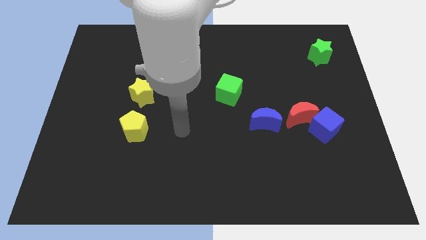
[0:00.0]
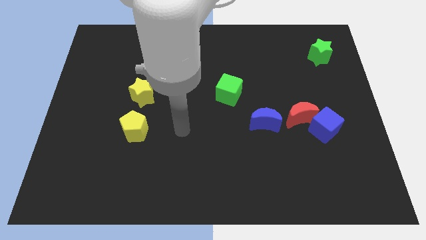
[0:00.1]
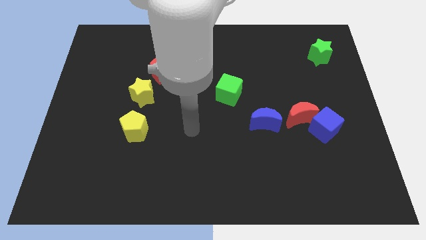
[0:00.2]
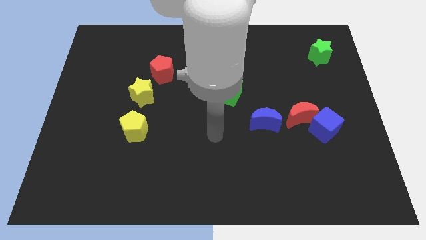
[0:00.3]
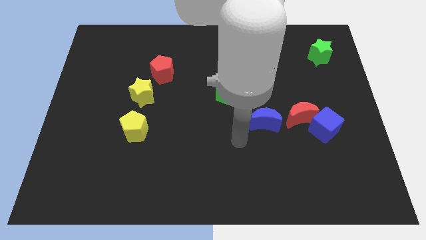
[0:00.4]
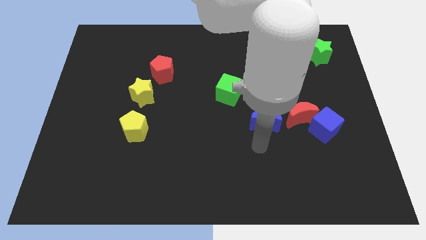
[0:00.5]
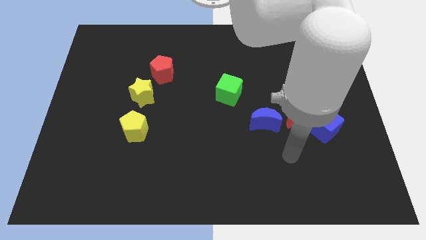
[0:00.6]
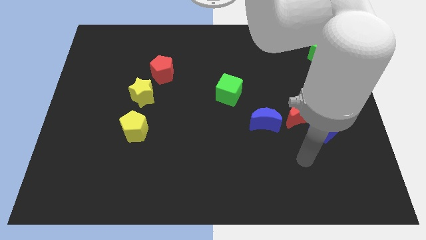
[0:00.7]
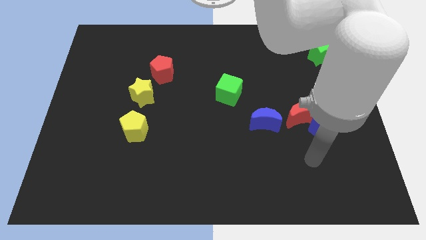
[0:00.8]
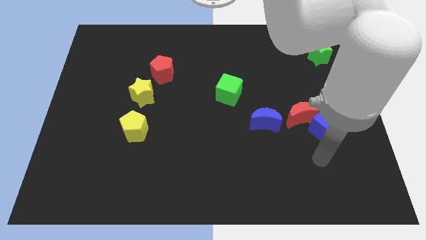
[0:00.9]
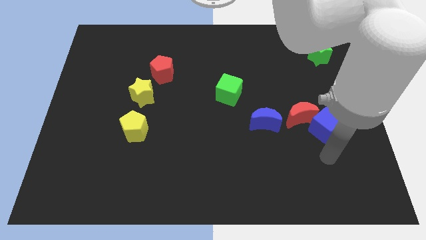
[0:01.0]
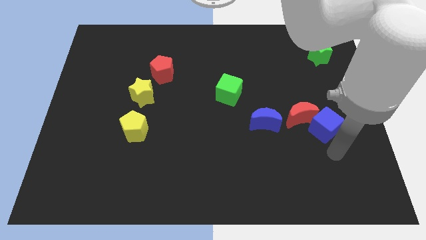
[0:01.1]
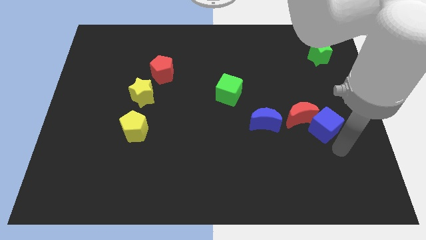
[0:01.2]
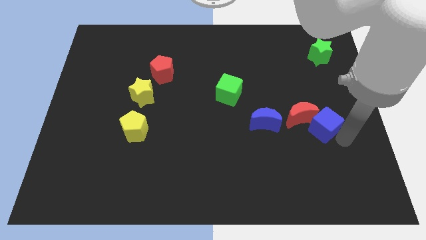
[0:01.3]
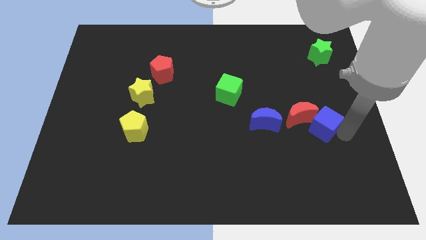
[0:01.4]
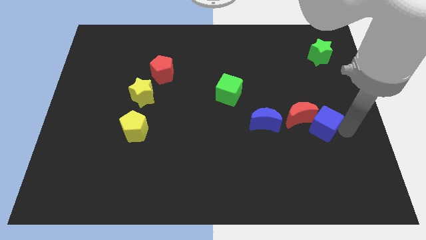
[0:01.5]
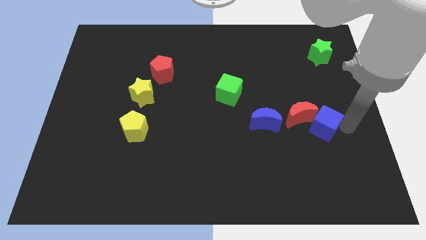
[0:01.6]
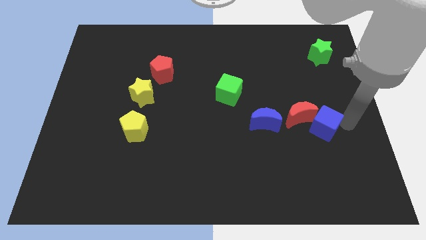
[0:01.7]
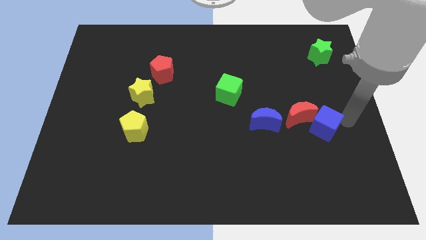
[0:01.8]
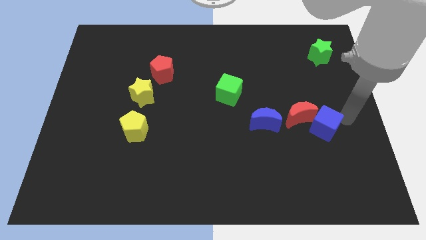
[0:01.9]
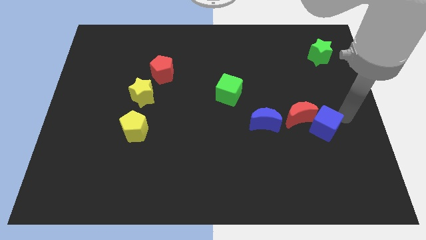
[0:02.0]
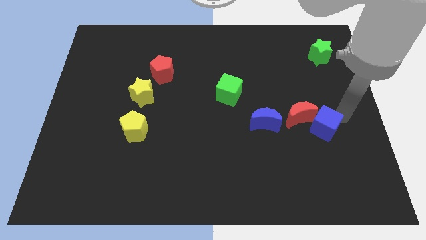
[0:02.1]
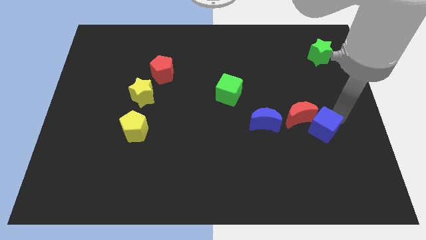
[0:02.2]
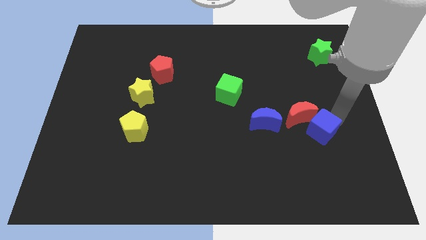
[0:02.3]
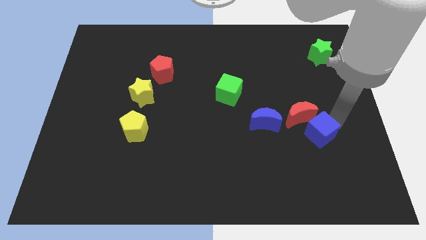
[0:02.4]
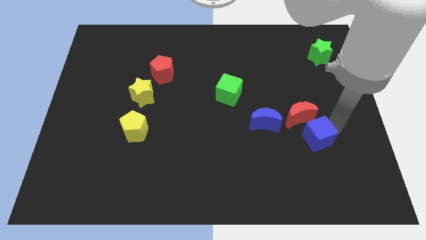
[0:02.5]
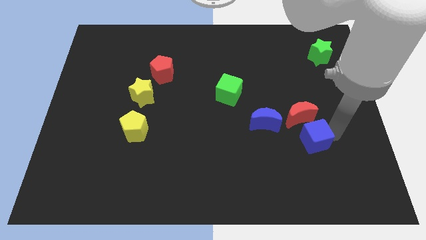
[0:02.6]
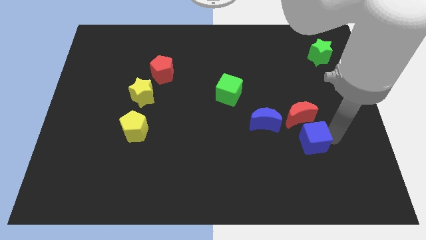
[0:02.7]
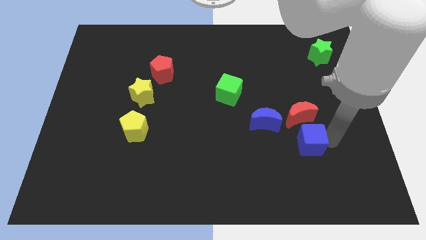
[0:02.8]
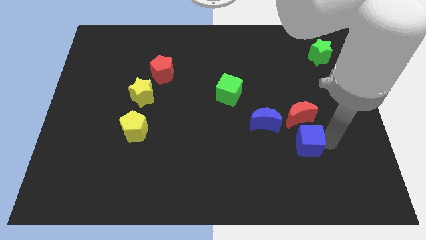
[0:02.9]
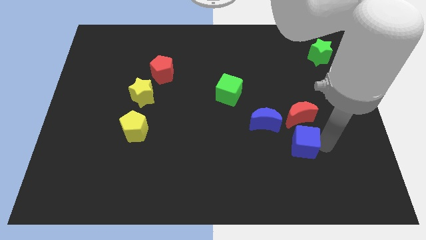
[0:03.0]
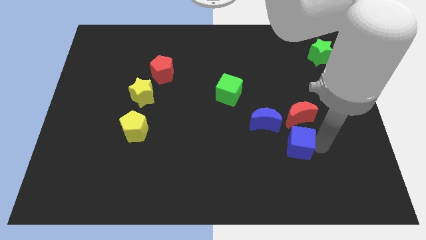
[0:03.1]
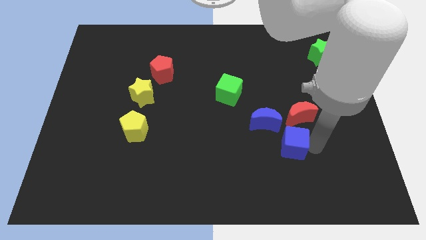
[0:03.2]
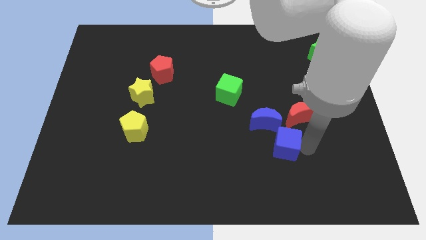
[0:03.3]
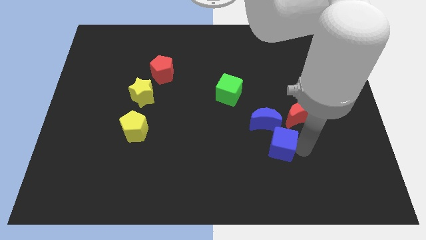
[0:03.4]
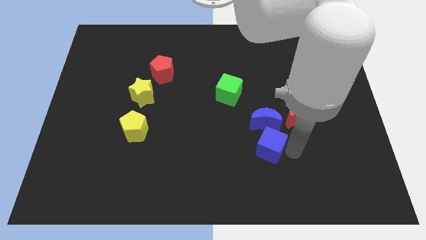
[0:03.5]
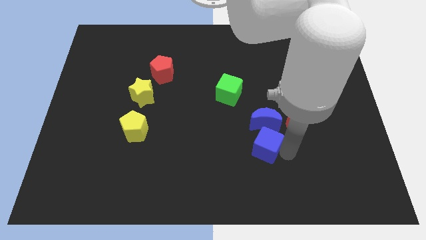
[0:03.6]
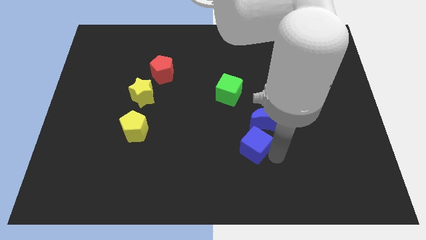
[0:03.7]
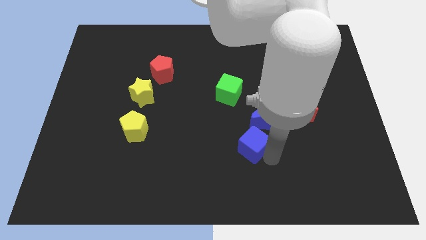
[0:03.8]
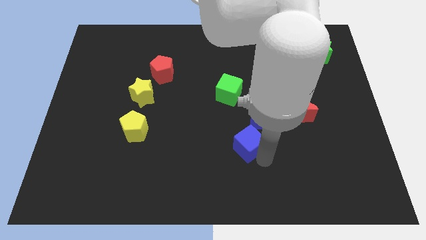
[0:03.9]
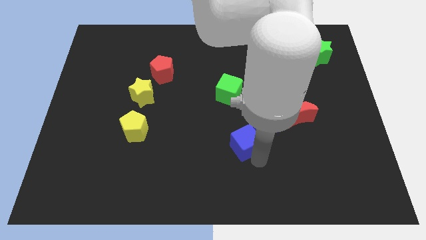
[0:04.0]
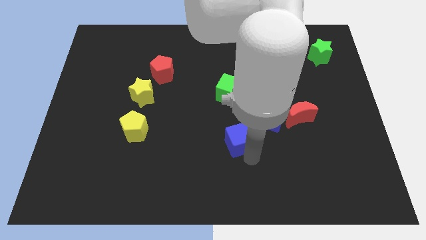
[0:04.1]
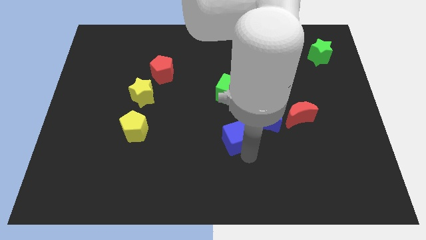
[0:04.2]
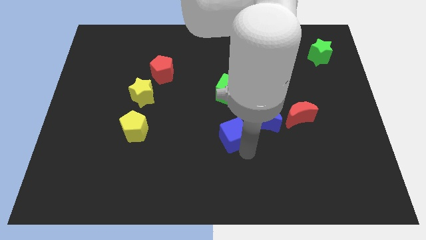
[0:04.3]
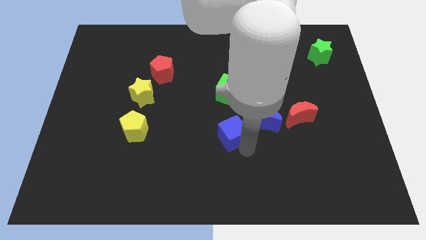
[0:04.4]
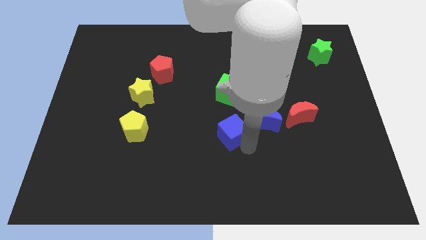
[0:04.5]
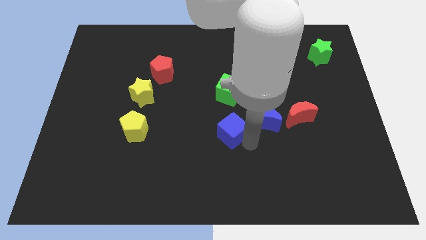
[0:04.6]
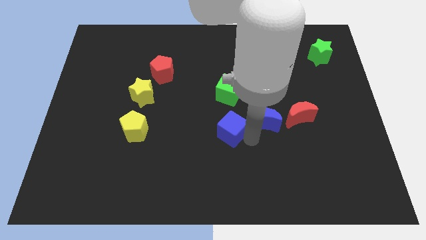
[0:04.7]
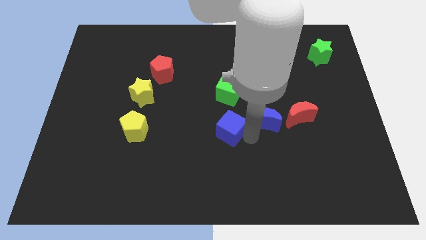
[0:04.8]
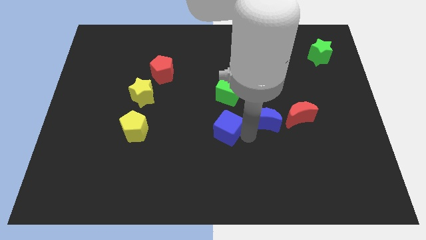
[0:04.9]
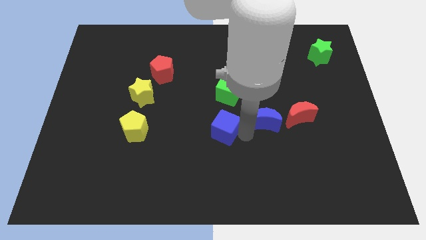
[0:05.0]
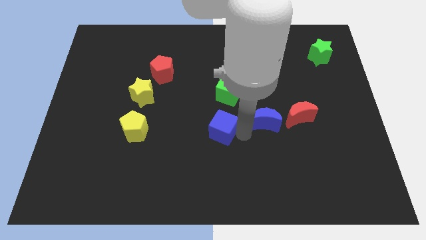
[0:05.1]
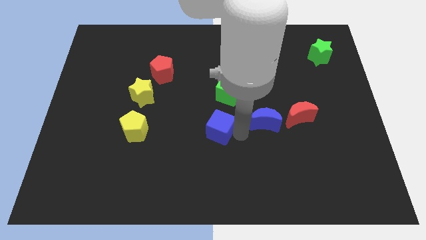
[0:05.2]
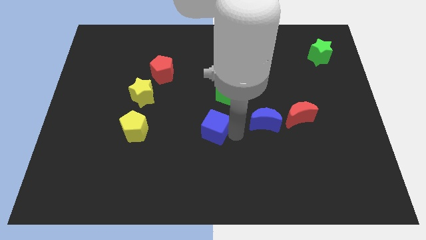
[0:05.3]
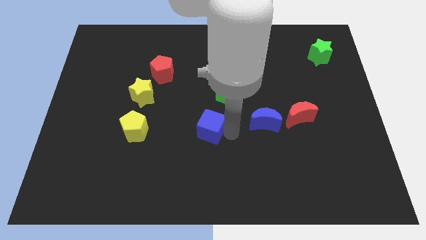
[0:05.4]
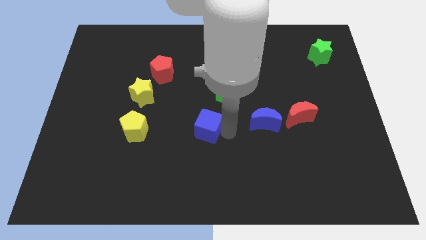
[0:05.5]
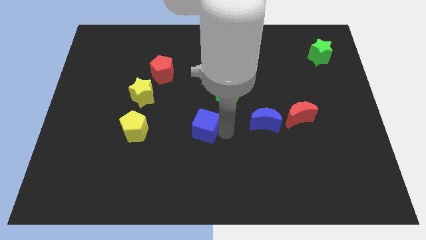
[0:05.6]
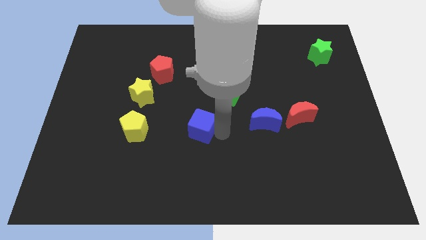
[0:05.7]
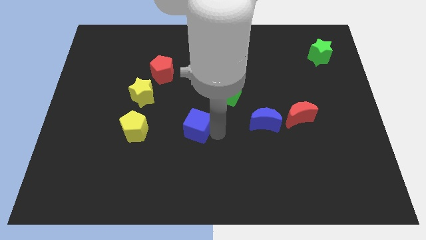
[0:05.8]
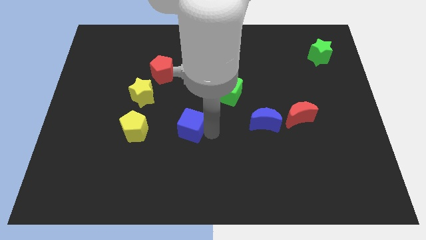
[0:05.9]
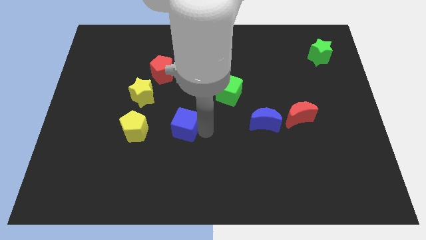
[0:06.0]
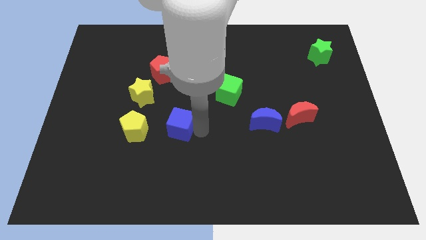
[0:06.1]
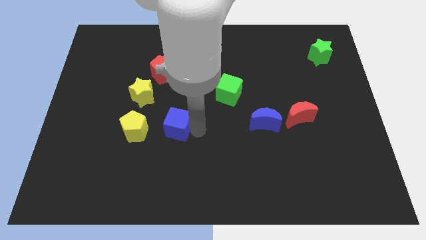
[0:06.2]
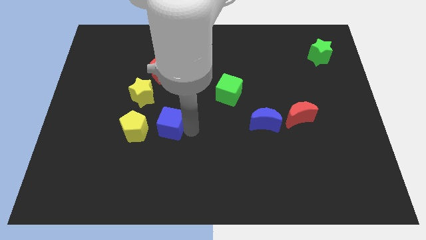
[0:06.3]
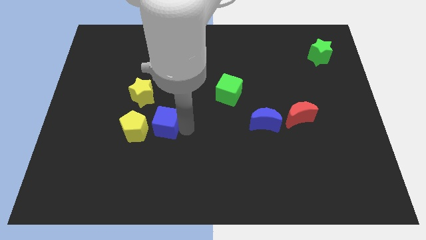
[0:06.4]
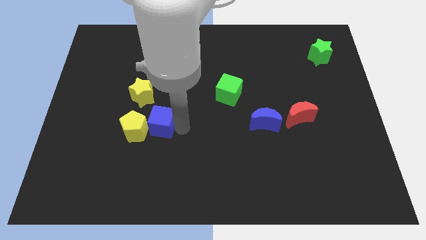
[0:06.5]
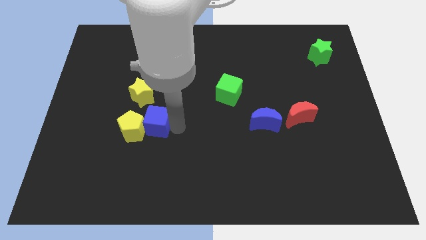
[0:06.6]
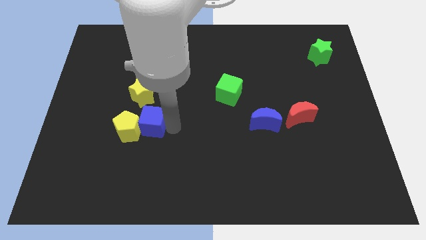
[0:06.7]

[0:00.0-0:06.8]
put the blue cube to the yellow pentagon

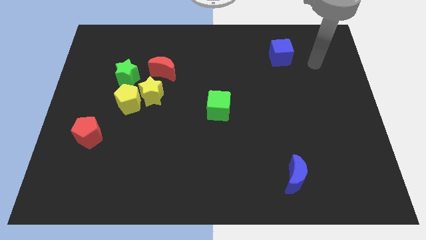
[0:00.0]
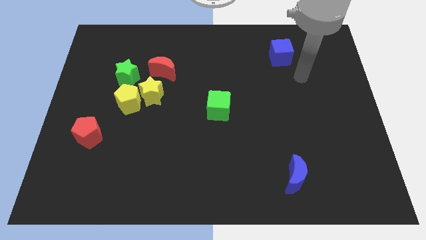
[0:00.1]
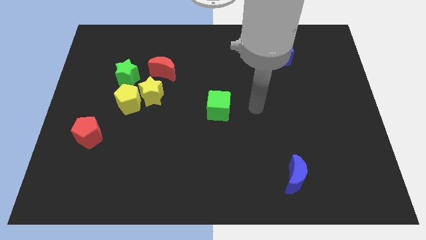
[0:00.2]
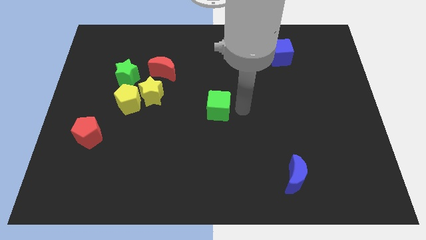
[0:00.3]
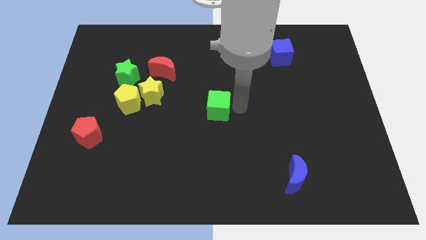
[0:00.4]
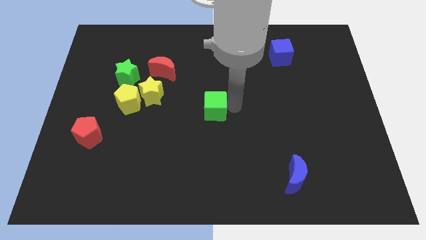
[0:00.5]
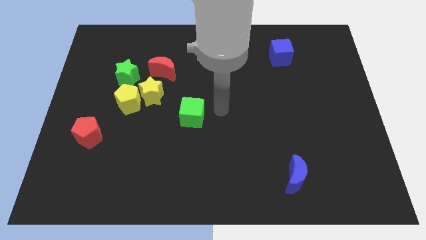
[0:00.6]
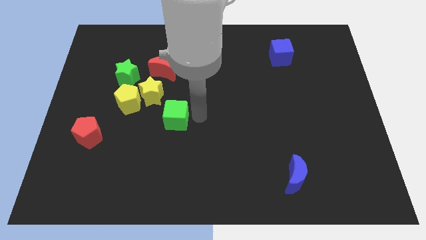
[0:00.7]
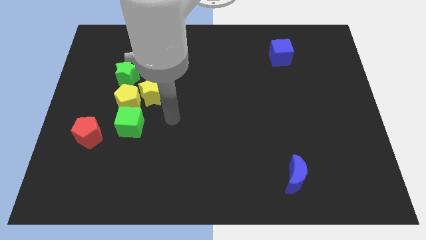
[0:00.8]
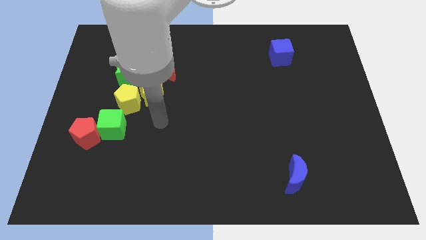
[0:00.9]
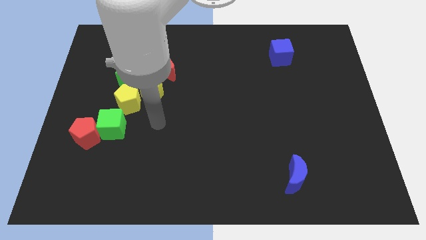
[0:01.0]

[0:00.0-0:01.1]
put the green cube close to the red pentagon

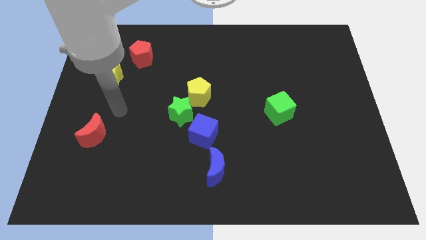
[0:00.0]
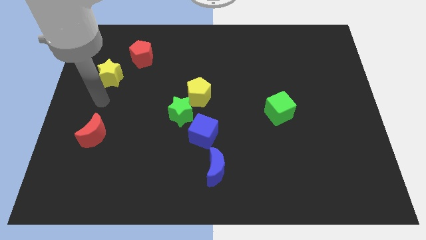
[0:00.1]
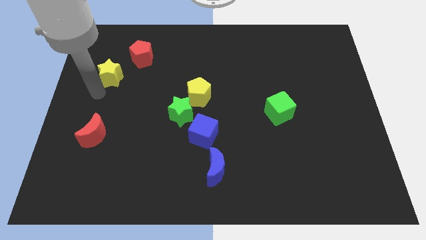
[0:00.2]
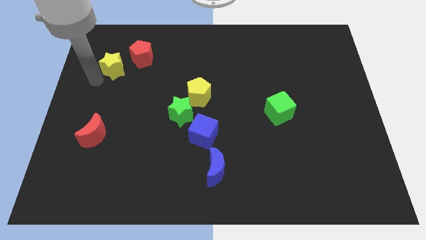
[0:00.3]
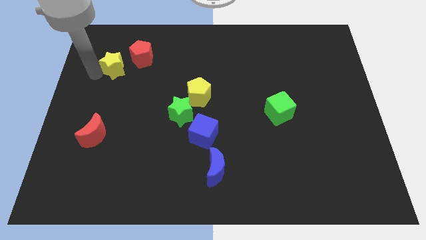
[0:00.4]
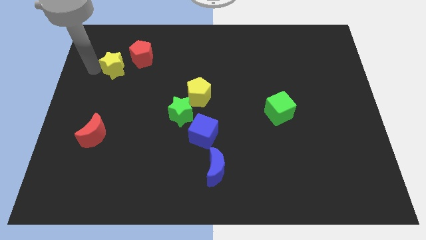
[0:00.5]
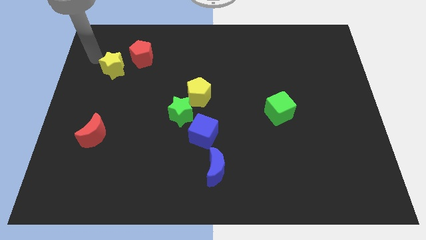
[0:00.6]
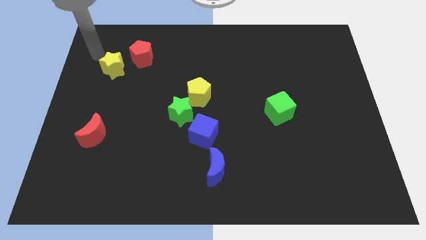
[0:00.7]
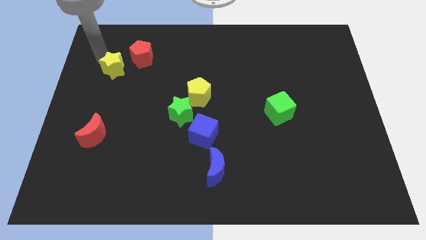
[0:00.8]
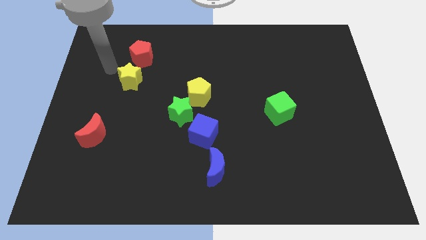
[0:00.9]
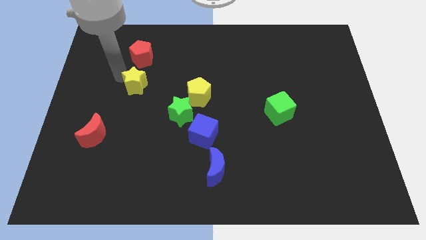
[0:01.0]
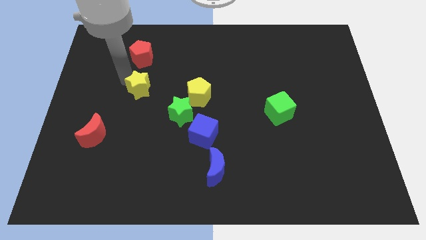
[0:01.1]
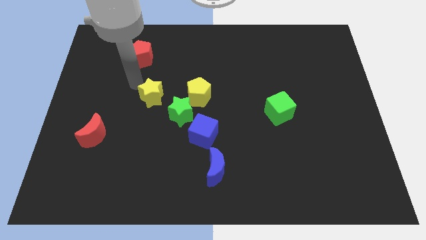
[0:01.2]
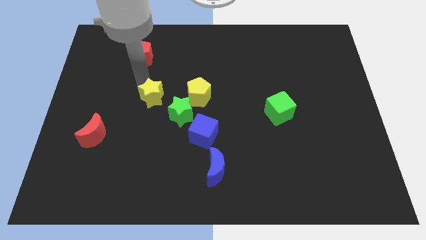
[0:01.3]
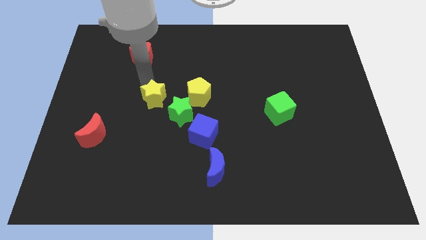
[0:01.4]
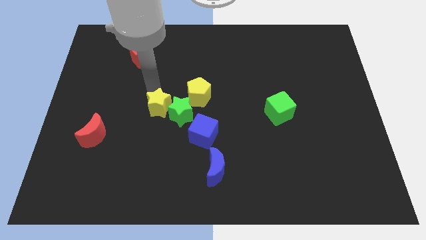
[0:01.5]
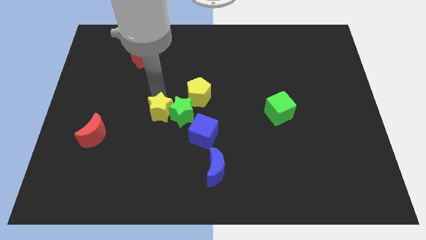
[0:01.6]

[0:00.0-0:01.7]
move the yellow star towards the green star
